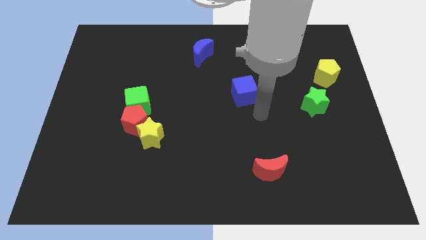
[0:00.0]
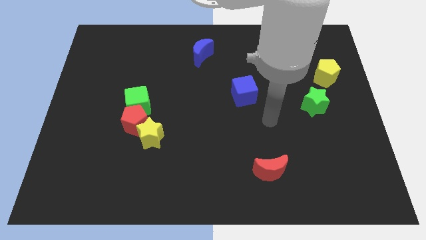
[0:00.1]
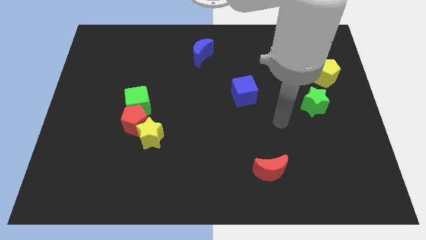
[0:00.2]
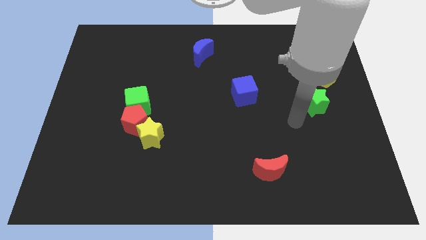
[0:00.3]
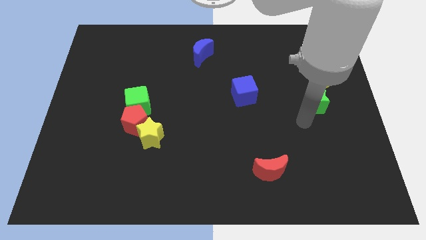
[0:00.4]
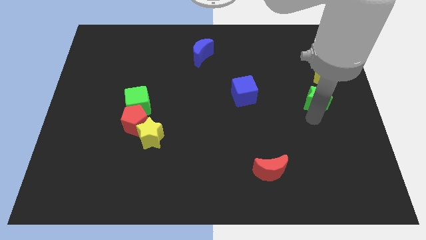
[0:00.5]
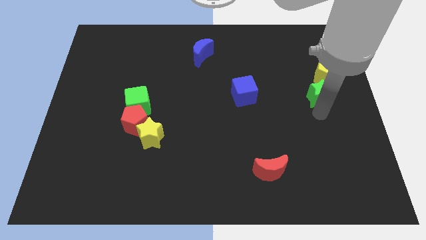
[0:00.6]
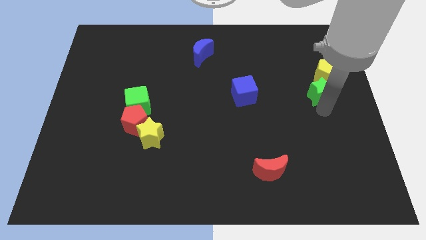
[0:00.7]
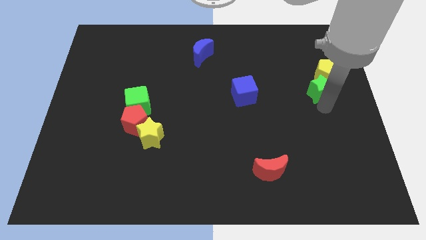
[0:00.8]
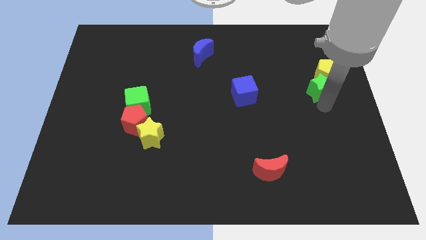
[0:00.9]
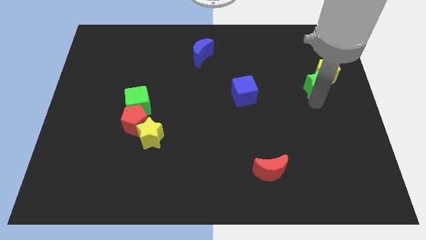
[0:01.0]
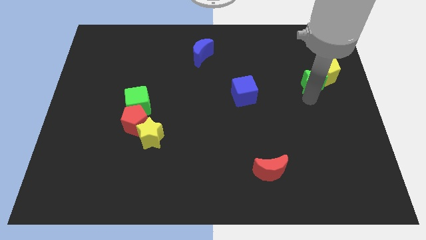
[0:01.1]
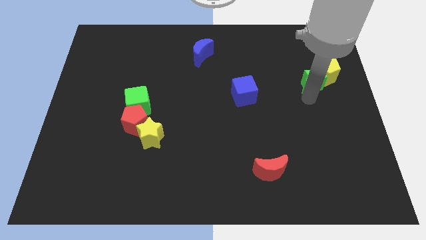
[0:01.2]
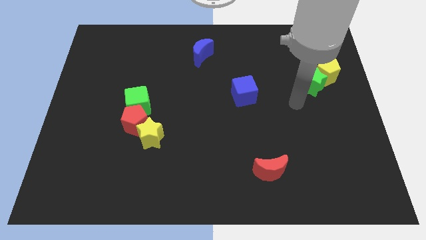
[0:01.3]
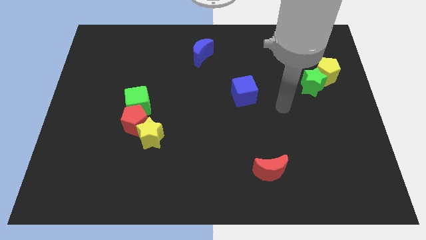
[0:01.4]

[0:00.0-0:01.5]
push the green star into the yellow pentagon

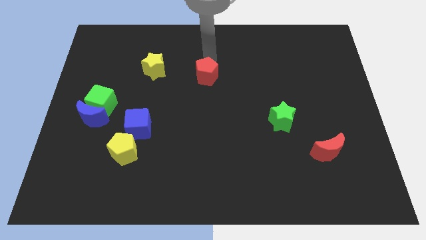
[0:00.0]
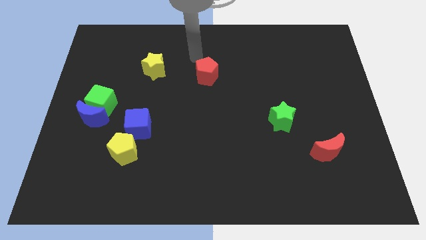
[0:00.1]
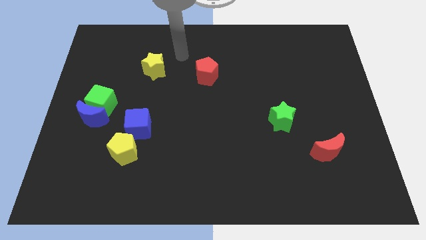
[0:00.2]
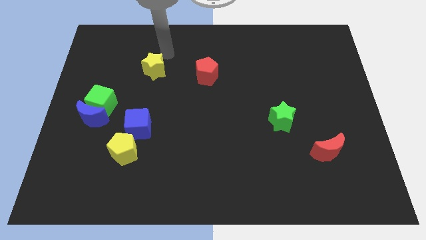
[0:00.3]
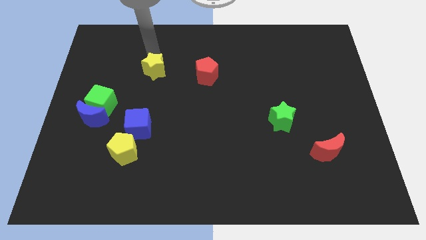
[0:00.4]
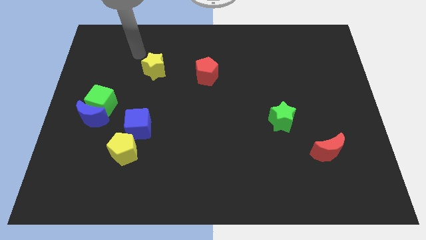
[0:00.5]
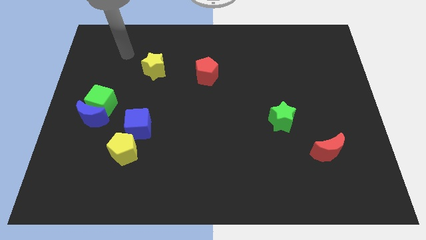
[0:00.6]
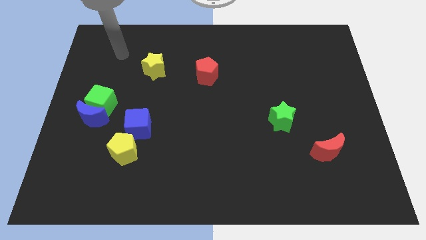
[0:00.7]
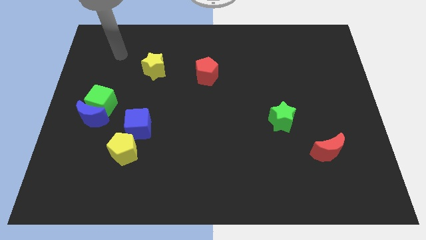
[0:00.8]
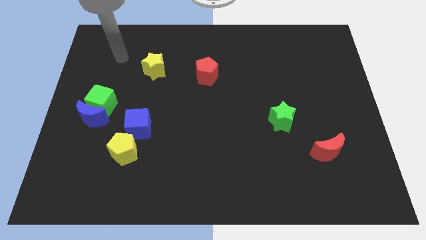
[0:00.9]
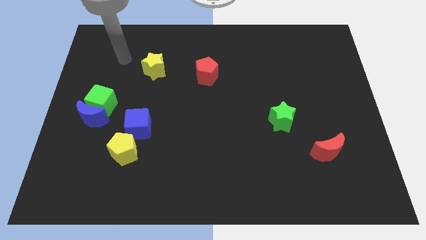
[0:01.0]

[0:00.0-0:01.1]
move the arm away from the red pentagon

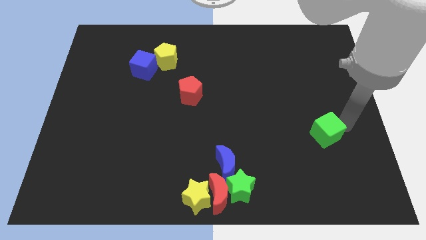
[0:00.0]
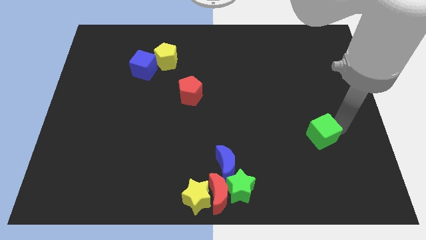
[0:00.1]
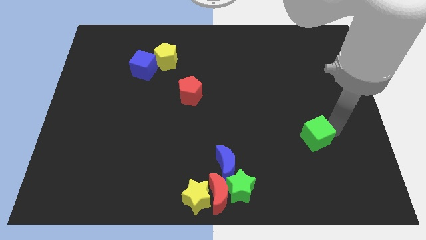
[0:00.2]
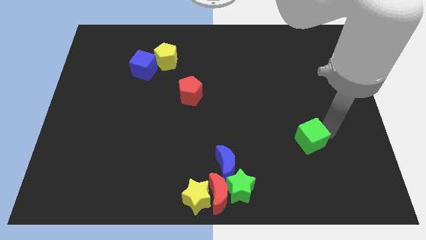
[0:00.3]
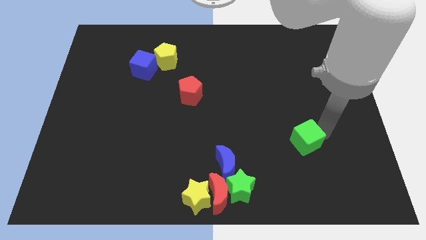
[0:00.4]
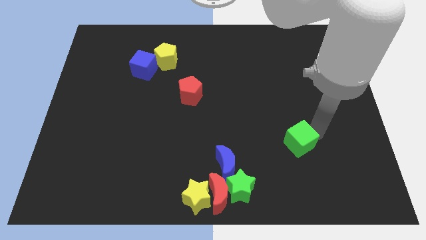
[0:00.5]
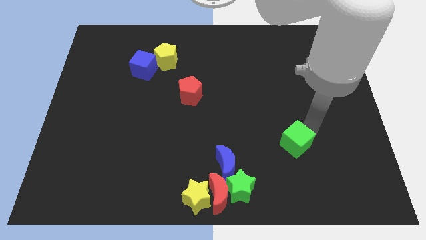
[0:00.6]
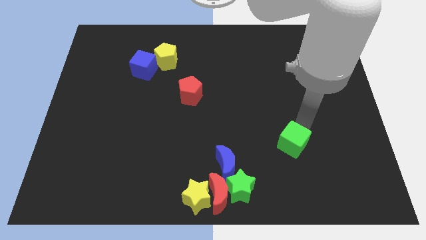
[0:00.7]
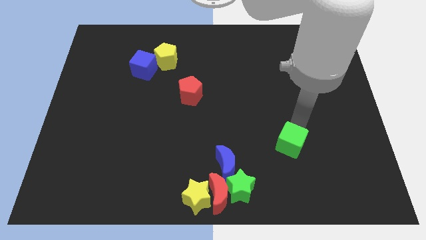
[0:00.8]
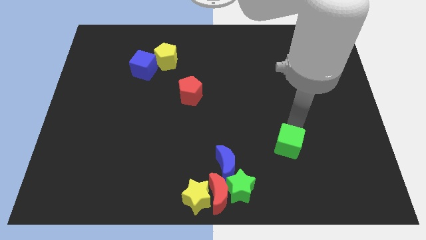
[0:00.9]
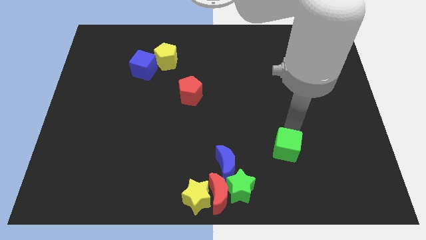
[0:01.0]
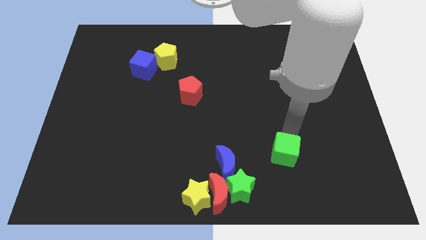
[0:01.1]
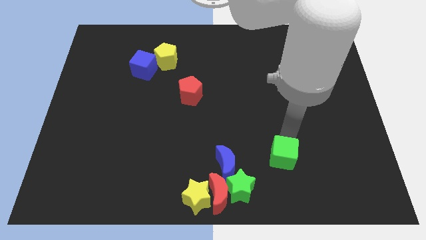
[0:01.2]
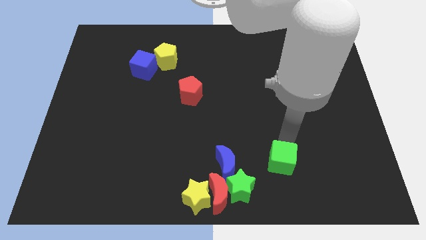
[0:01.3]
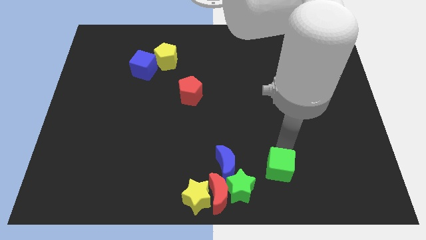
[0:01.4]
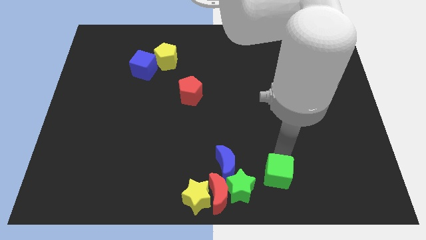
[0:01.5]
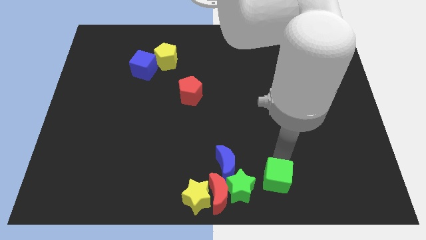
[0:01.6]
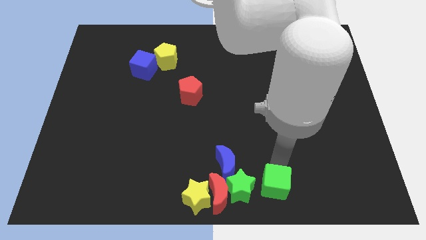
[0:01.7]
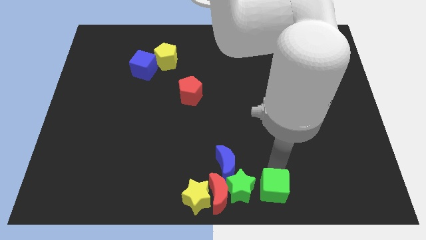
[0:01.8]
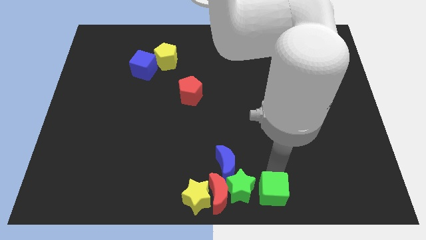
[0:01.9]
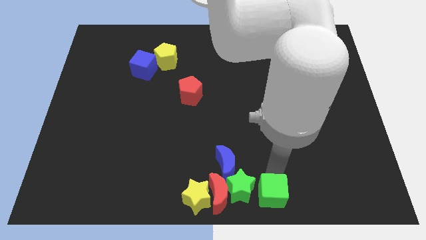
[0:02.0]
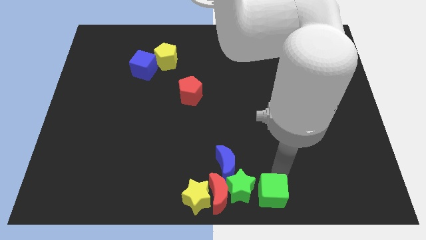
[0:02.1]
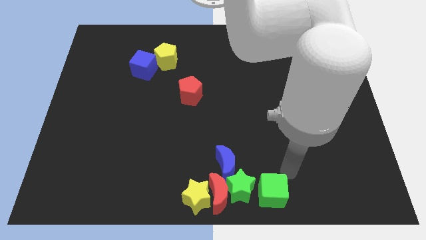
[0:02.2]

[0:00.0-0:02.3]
push the green cube to the right side of the green star

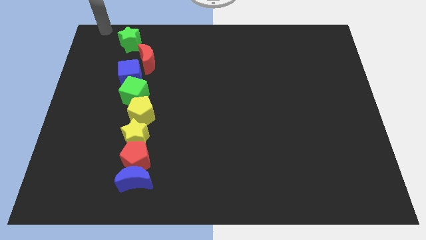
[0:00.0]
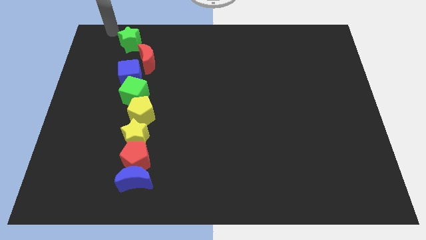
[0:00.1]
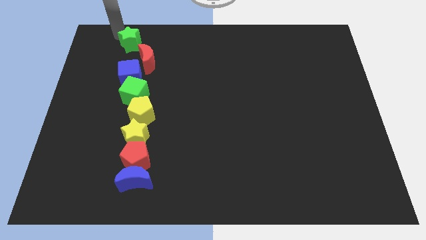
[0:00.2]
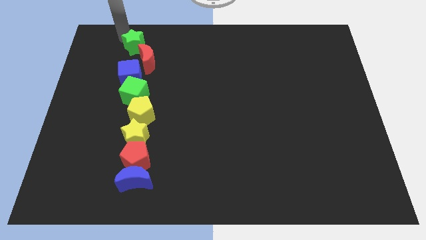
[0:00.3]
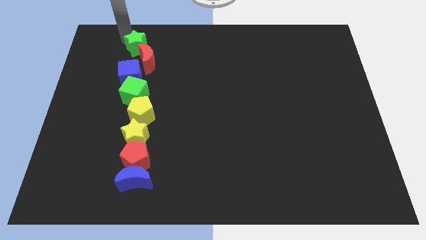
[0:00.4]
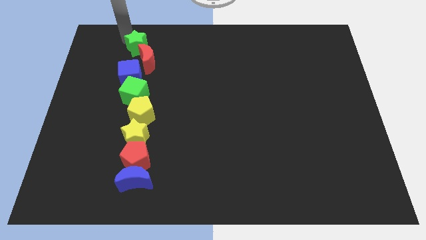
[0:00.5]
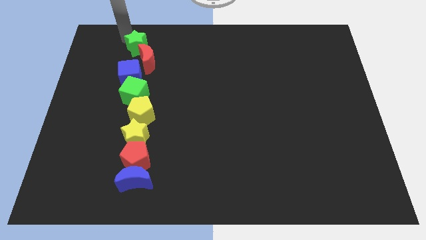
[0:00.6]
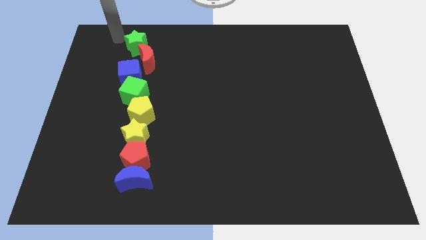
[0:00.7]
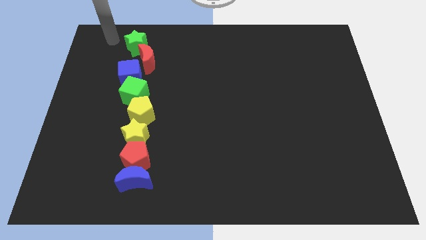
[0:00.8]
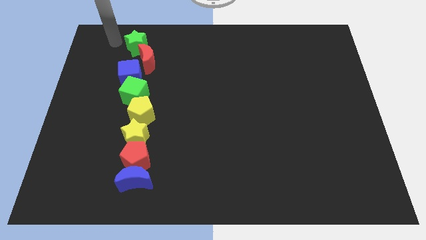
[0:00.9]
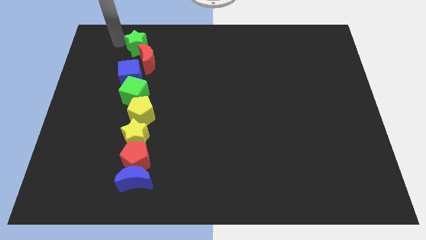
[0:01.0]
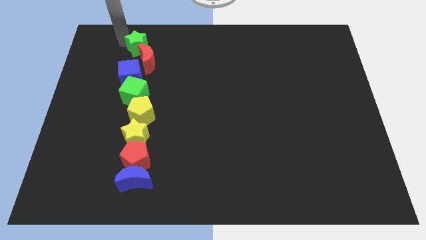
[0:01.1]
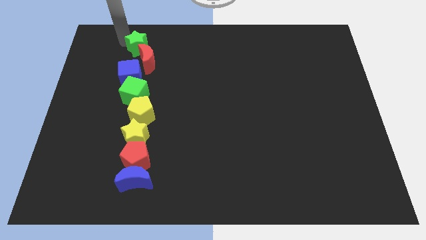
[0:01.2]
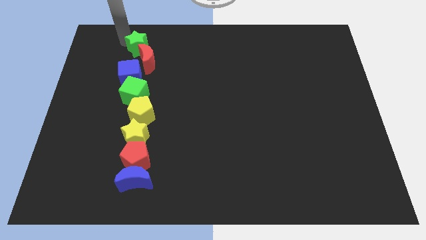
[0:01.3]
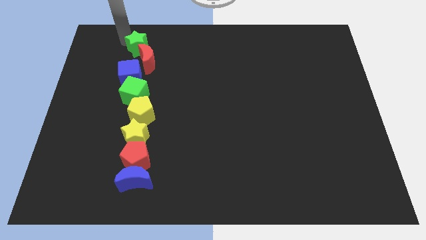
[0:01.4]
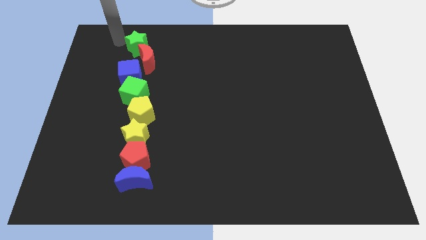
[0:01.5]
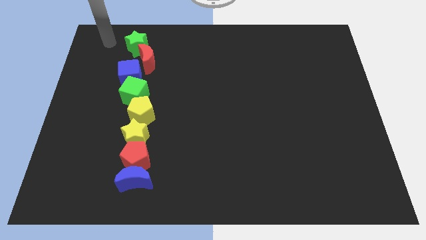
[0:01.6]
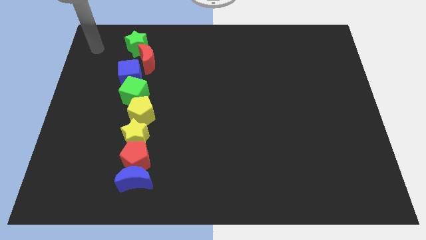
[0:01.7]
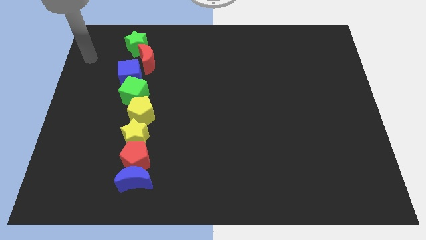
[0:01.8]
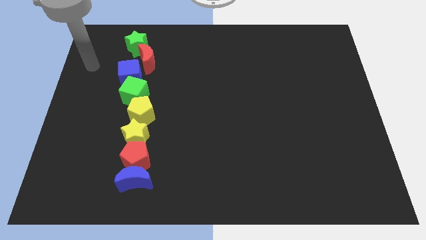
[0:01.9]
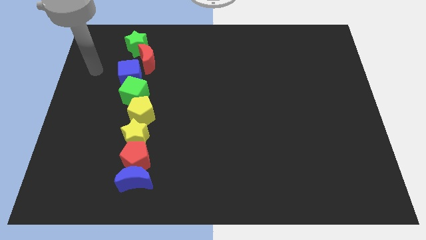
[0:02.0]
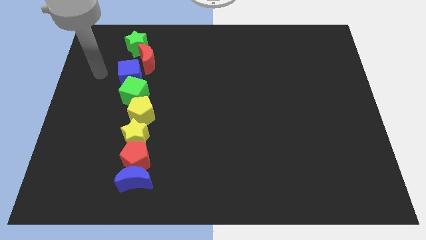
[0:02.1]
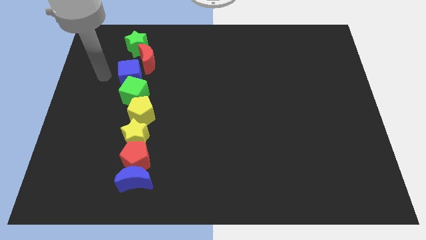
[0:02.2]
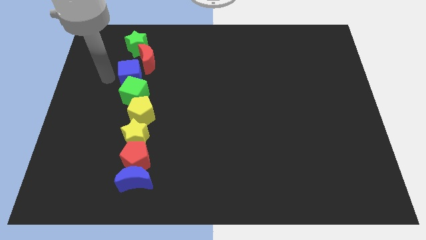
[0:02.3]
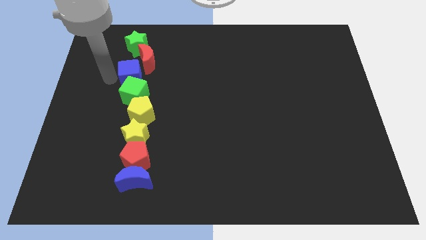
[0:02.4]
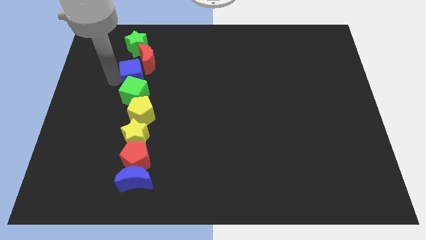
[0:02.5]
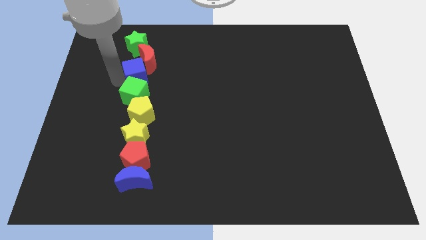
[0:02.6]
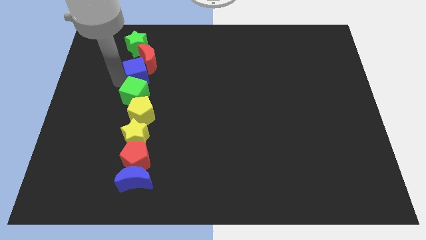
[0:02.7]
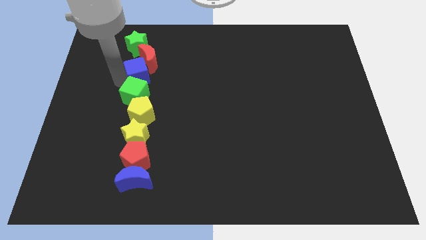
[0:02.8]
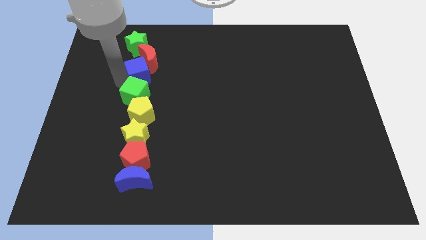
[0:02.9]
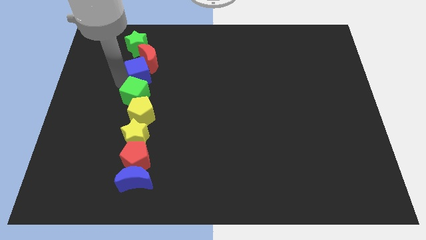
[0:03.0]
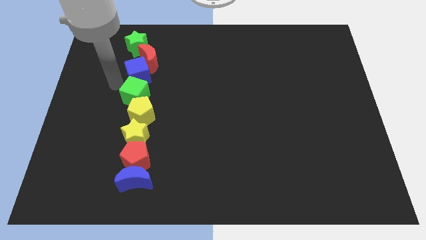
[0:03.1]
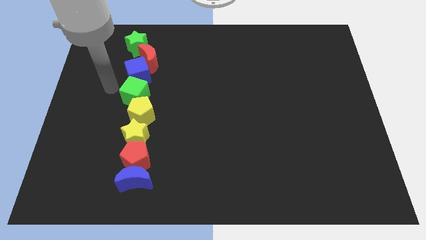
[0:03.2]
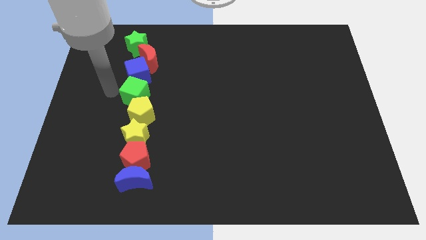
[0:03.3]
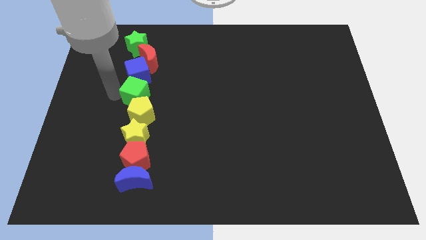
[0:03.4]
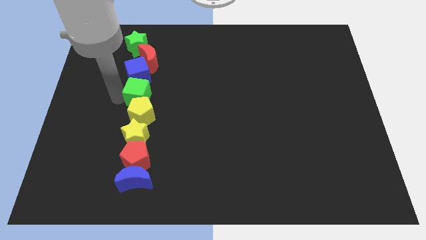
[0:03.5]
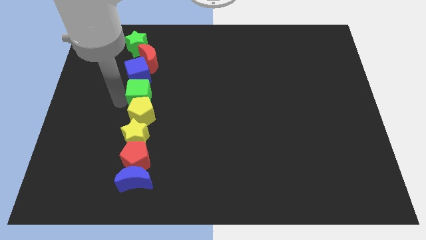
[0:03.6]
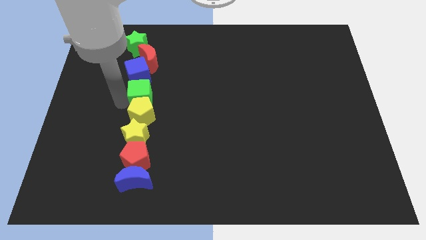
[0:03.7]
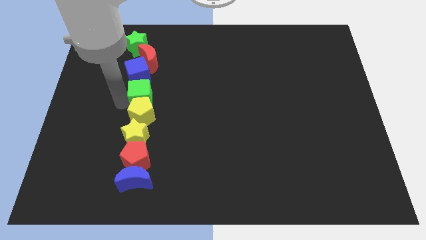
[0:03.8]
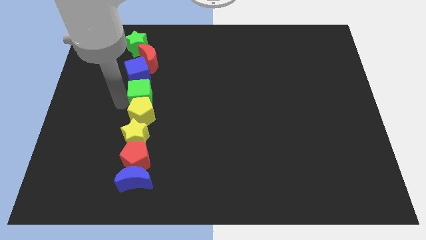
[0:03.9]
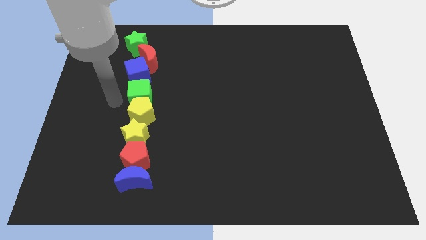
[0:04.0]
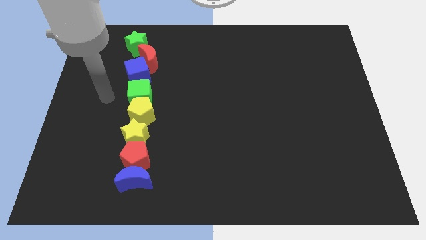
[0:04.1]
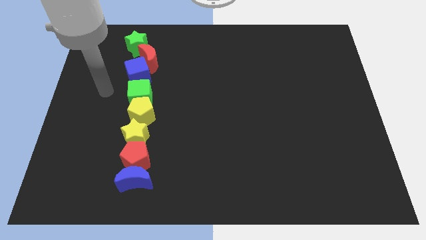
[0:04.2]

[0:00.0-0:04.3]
move group of objects into a line
